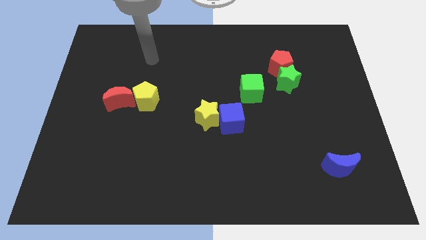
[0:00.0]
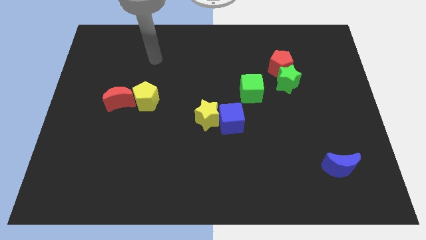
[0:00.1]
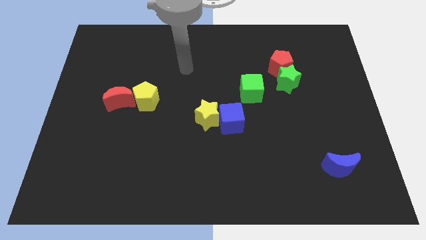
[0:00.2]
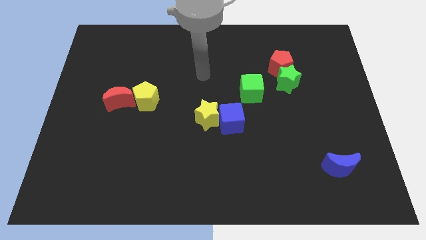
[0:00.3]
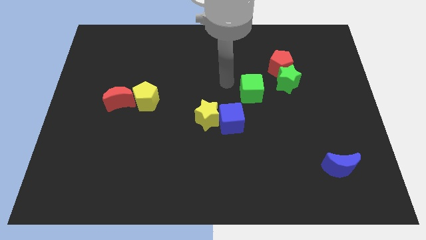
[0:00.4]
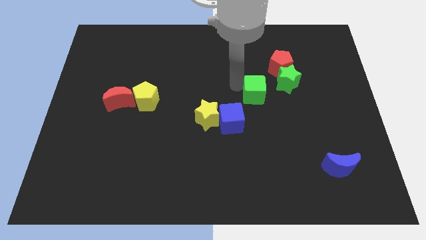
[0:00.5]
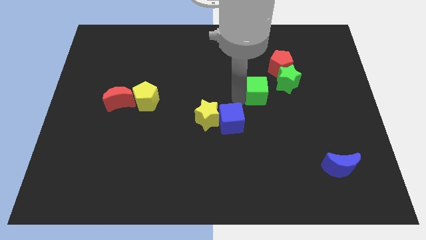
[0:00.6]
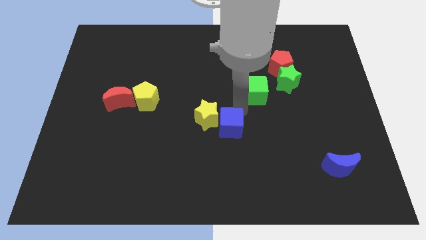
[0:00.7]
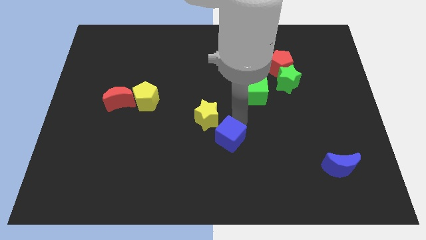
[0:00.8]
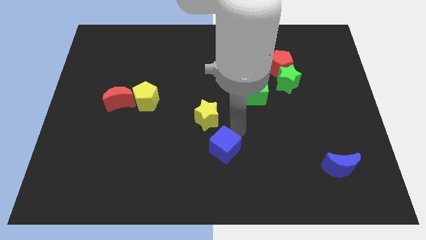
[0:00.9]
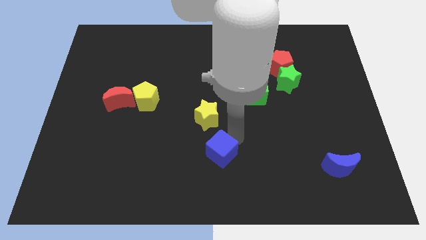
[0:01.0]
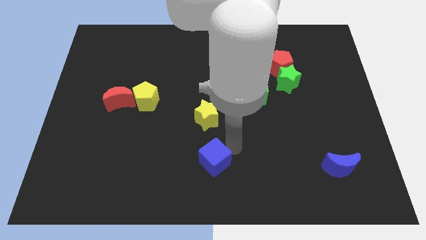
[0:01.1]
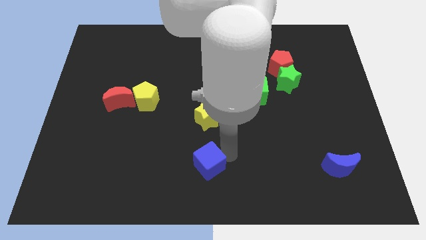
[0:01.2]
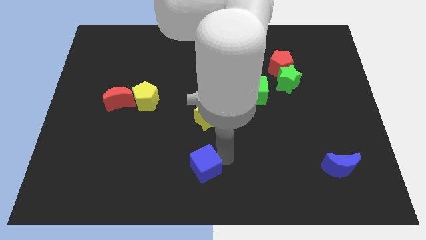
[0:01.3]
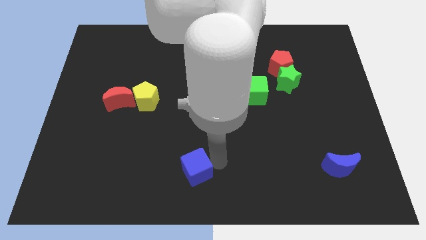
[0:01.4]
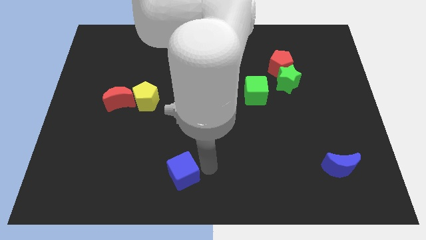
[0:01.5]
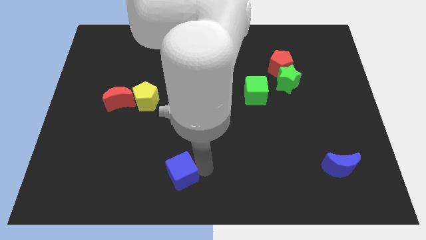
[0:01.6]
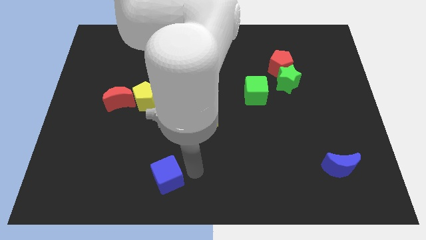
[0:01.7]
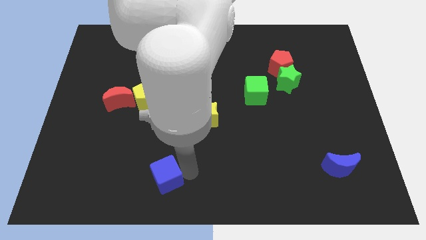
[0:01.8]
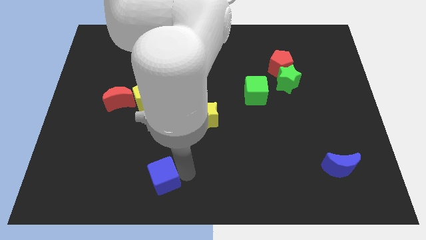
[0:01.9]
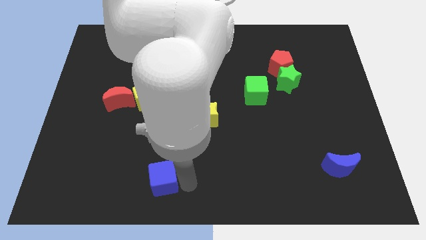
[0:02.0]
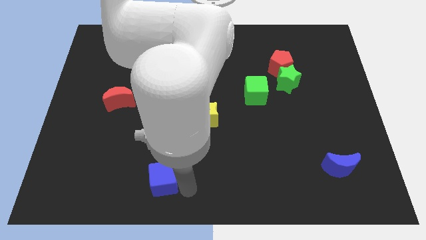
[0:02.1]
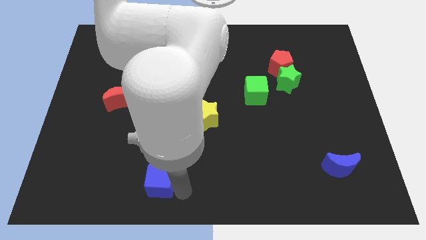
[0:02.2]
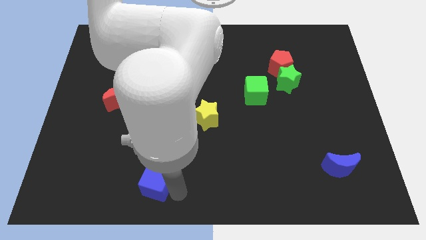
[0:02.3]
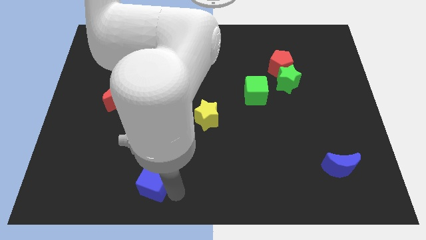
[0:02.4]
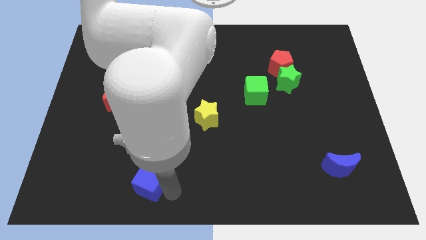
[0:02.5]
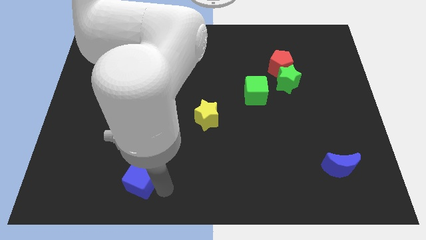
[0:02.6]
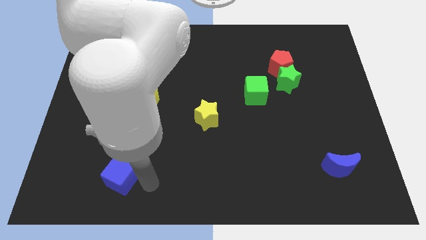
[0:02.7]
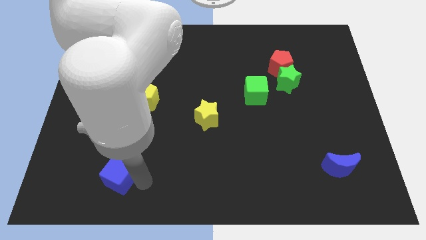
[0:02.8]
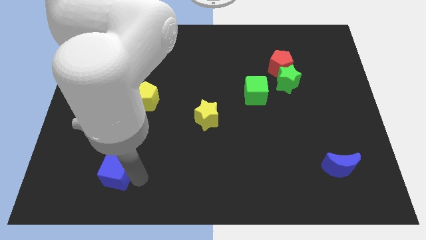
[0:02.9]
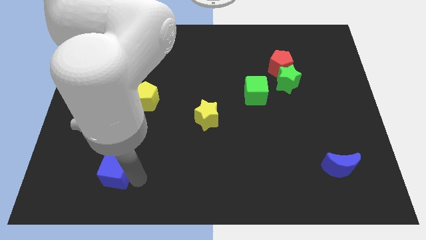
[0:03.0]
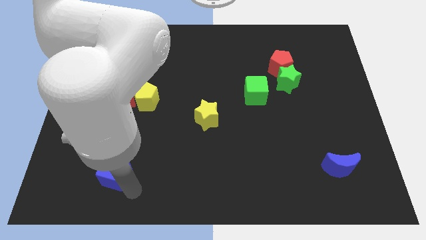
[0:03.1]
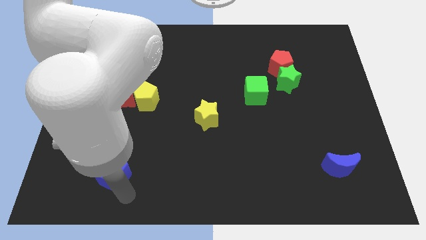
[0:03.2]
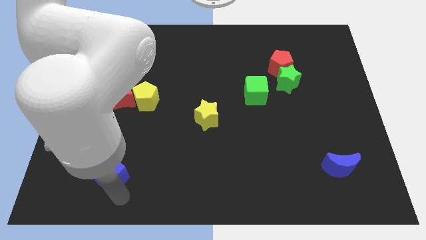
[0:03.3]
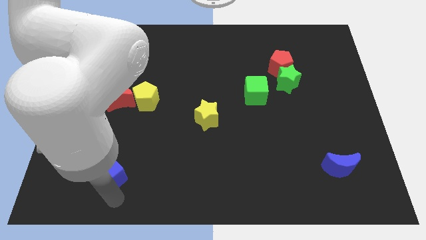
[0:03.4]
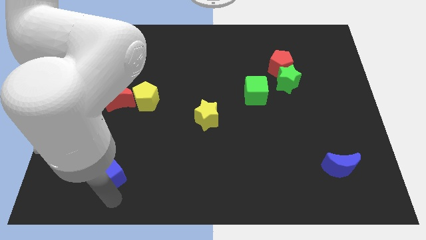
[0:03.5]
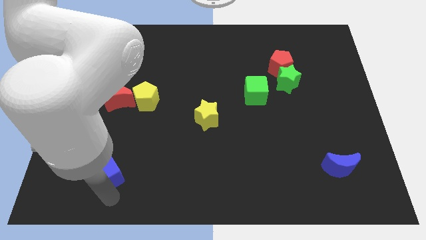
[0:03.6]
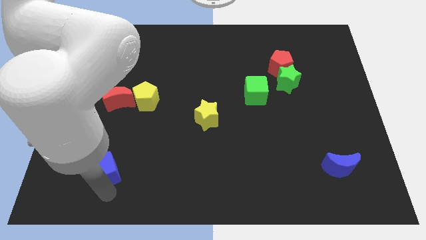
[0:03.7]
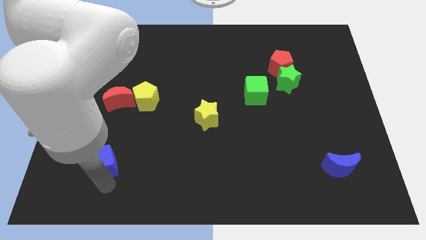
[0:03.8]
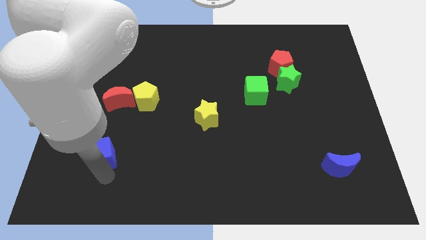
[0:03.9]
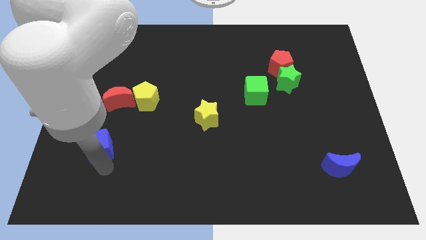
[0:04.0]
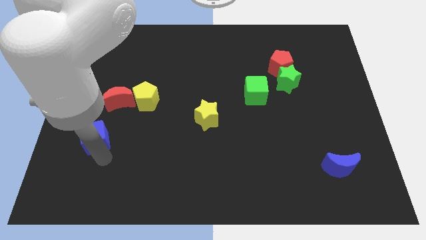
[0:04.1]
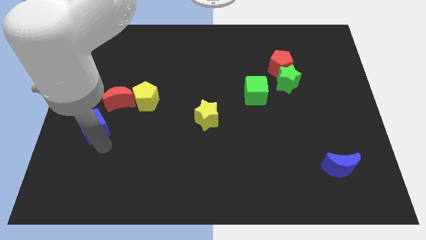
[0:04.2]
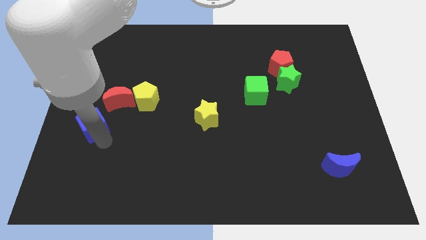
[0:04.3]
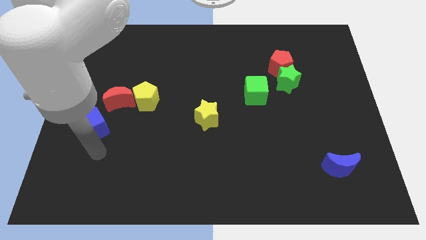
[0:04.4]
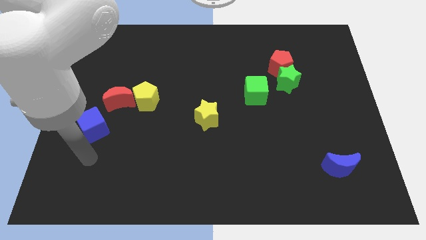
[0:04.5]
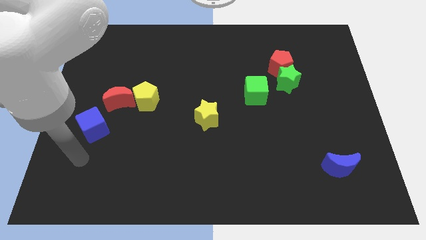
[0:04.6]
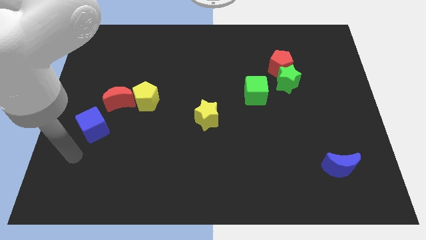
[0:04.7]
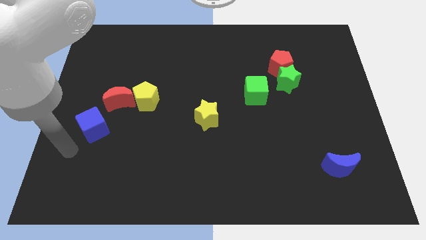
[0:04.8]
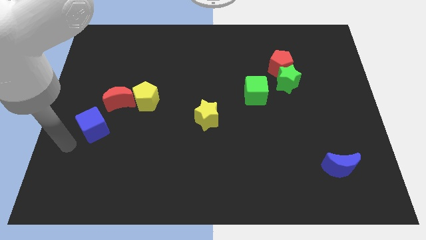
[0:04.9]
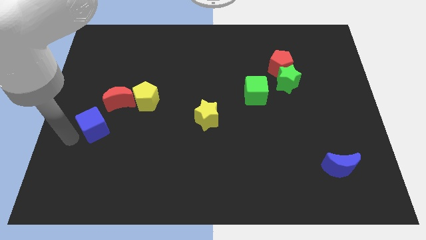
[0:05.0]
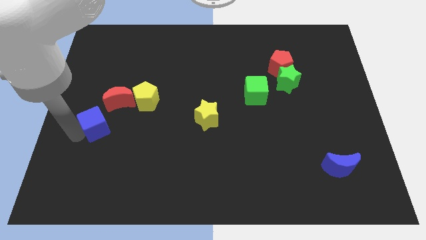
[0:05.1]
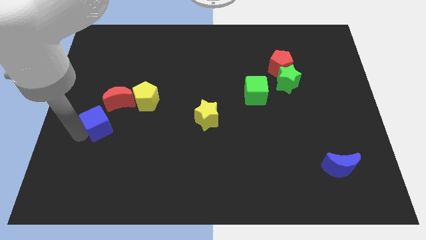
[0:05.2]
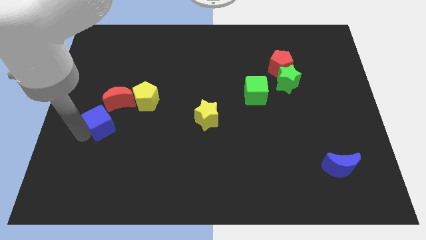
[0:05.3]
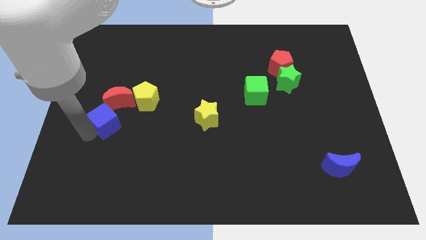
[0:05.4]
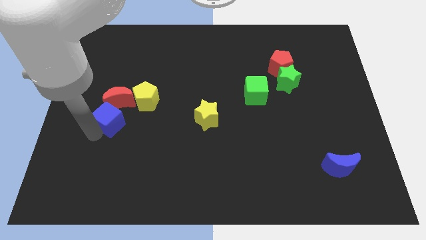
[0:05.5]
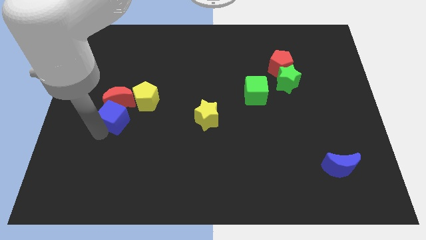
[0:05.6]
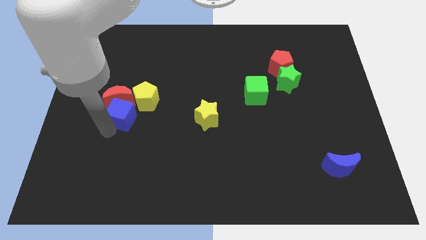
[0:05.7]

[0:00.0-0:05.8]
move the blue cube close to the red moon

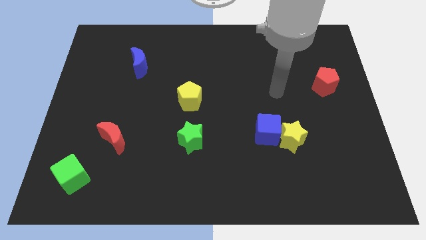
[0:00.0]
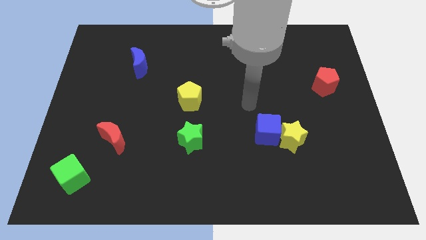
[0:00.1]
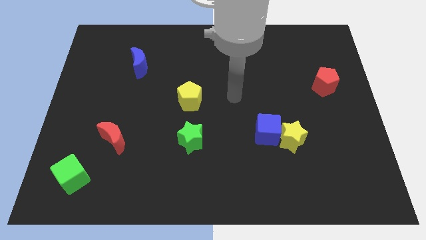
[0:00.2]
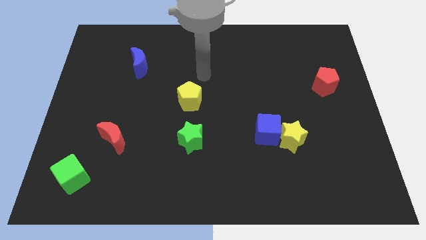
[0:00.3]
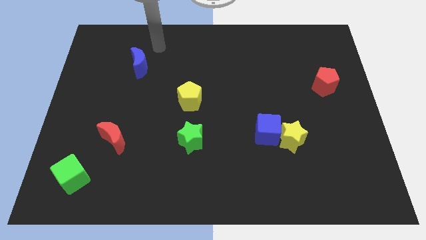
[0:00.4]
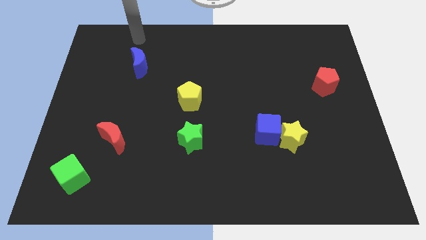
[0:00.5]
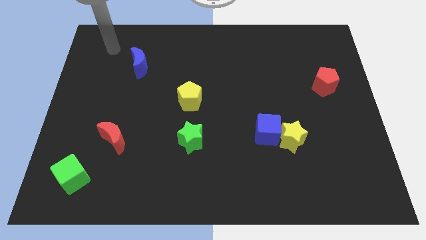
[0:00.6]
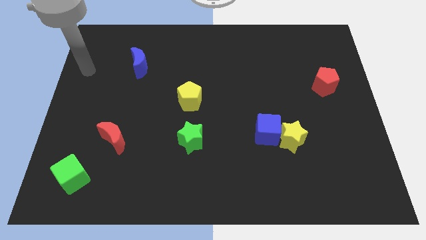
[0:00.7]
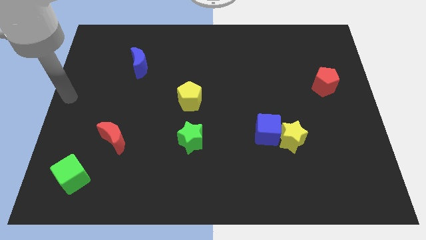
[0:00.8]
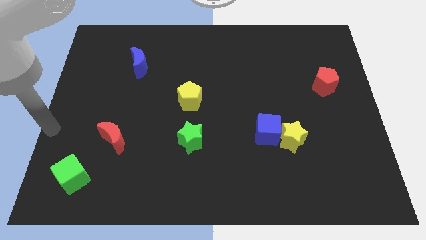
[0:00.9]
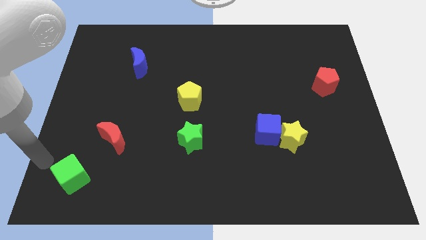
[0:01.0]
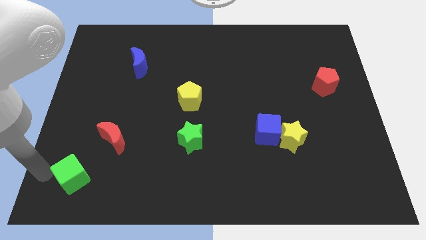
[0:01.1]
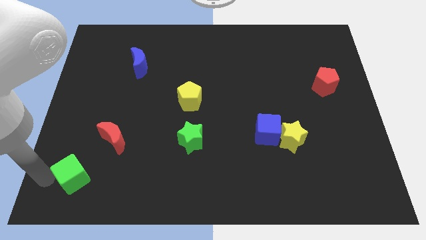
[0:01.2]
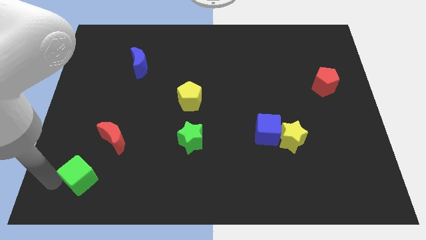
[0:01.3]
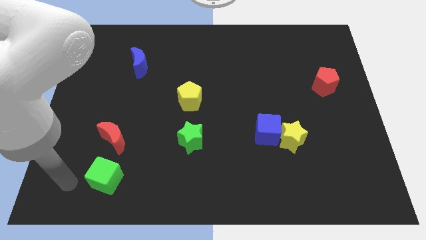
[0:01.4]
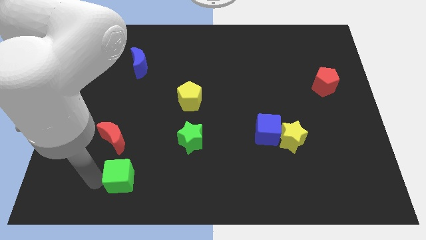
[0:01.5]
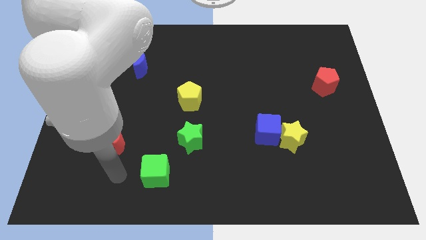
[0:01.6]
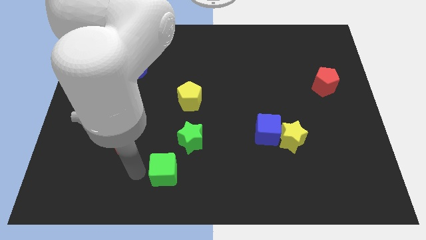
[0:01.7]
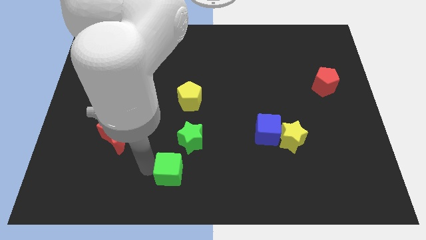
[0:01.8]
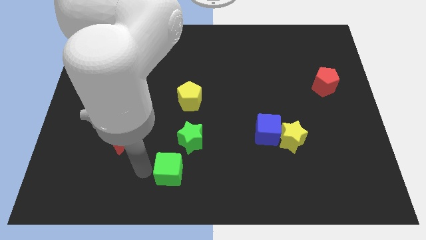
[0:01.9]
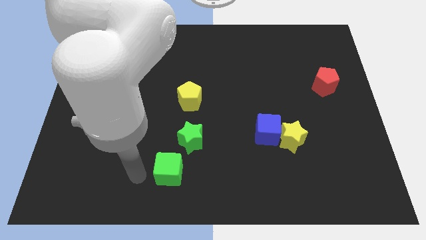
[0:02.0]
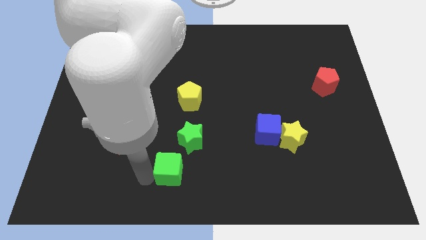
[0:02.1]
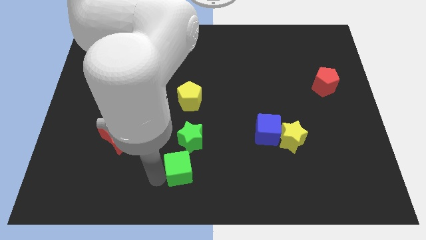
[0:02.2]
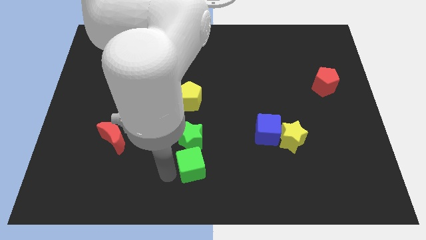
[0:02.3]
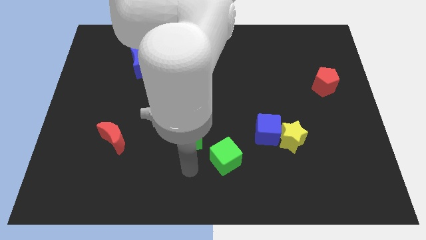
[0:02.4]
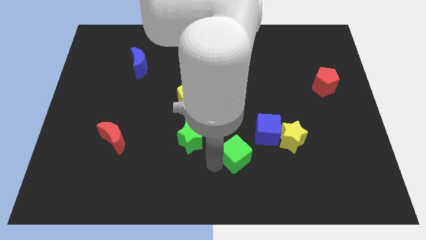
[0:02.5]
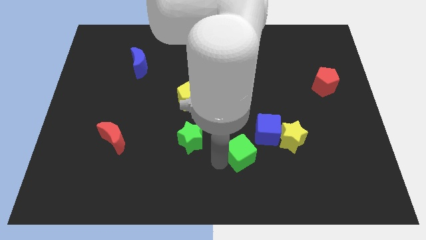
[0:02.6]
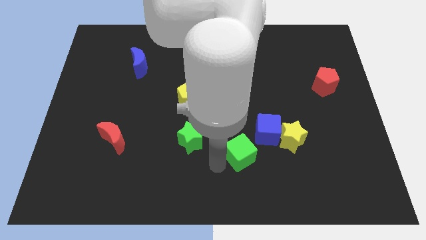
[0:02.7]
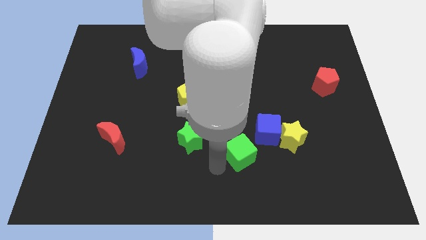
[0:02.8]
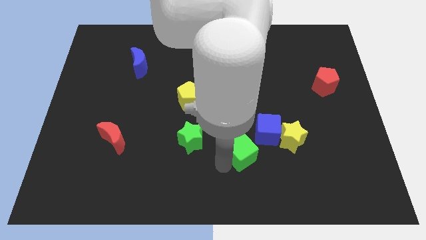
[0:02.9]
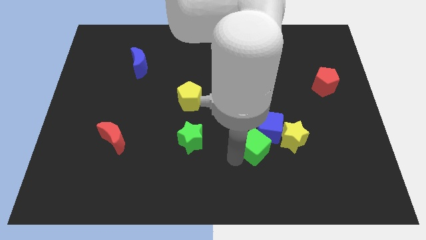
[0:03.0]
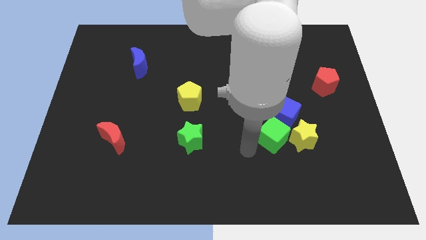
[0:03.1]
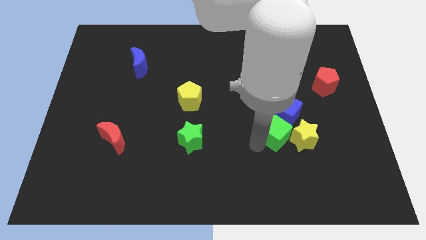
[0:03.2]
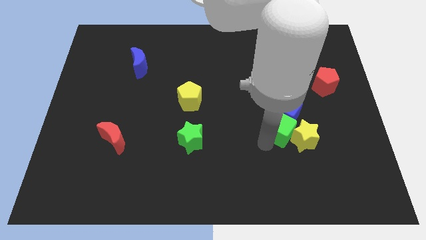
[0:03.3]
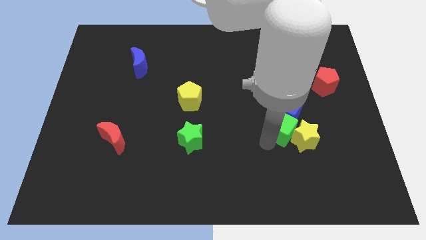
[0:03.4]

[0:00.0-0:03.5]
move the green cube next to the blue cube
